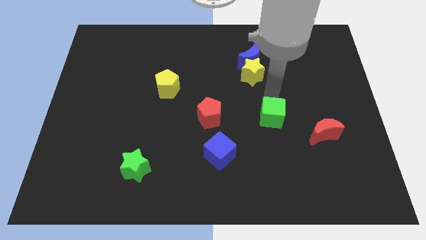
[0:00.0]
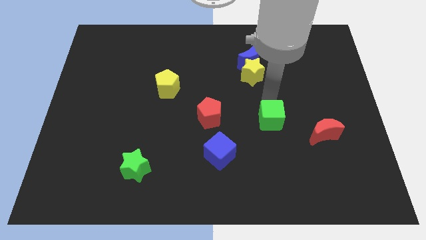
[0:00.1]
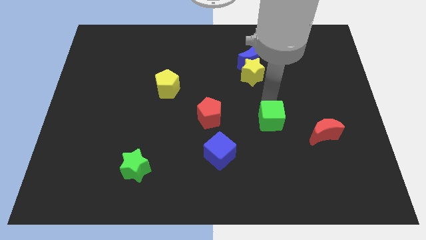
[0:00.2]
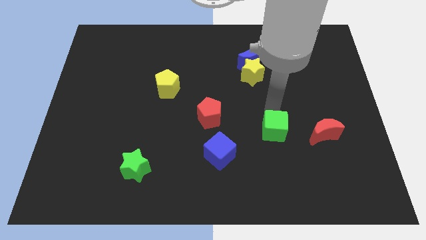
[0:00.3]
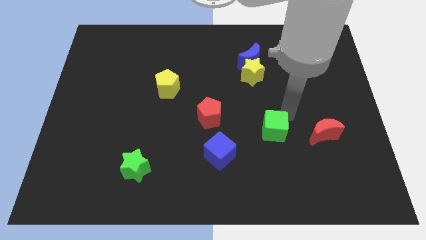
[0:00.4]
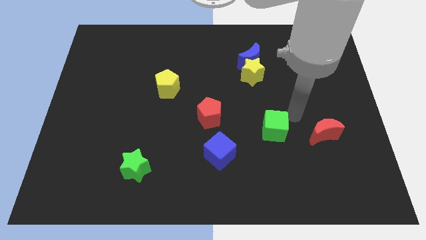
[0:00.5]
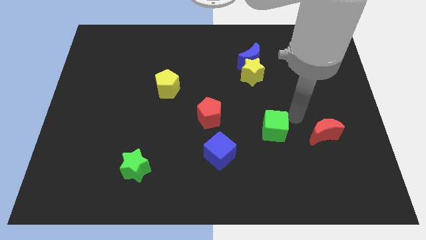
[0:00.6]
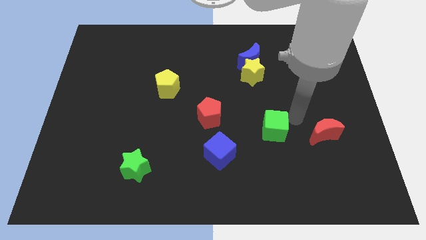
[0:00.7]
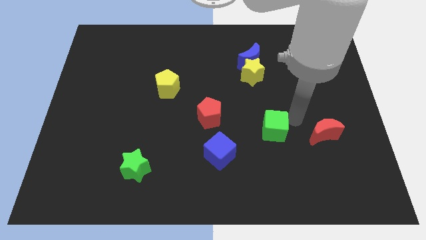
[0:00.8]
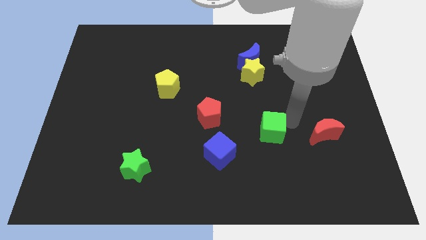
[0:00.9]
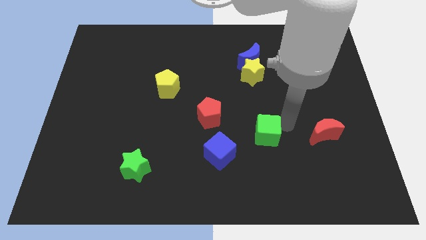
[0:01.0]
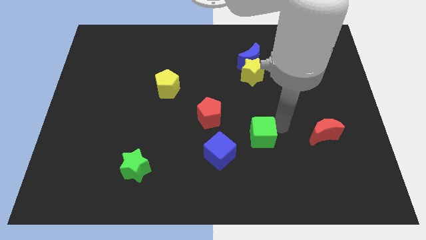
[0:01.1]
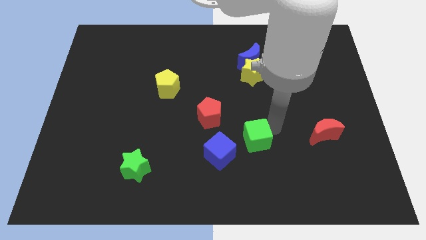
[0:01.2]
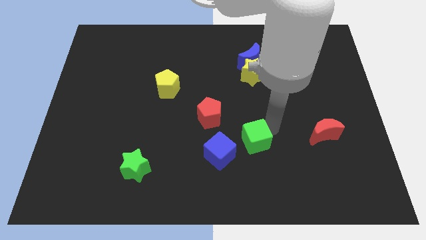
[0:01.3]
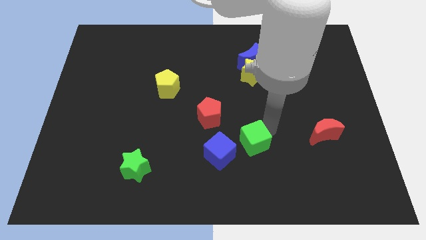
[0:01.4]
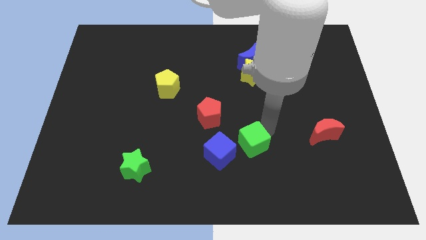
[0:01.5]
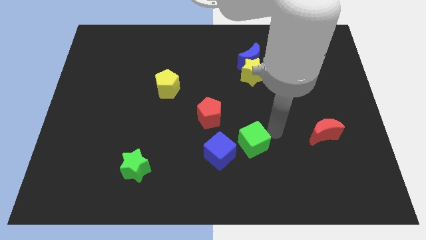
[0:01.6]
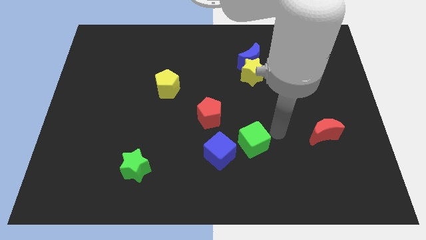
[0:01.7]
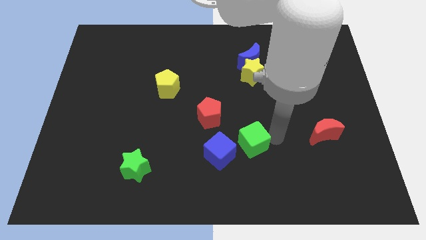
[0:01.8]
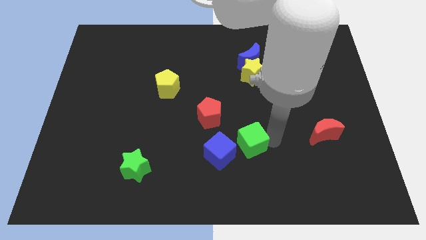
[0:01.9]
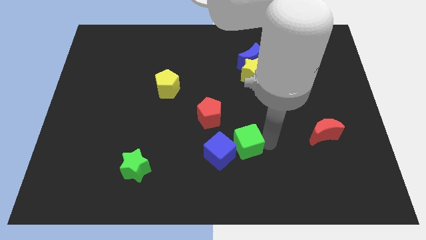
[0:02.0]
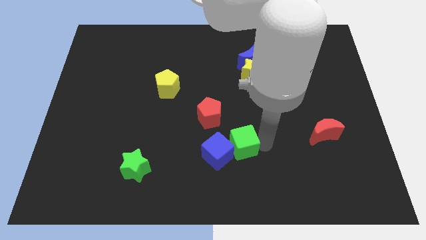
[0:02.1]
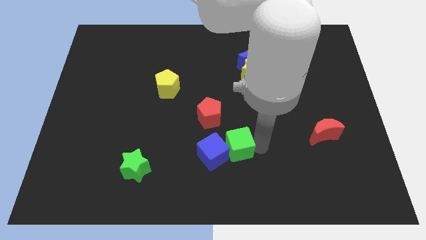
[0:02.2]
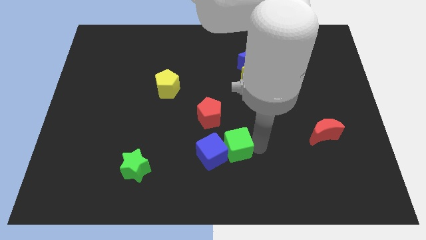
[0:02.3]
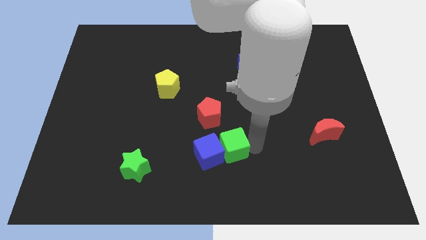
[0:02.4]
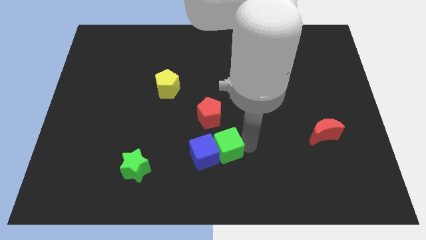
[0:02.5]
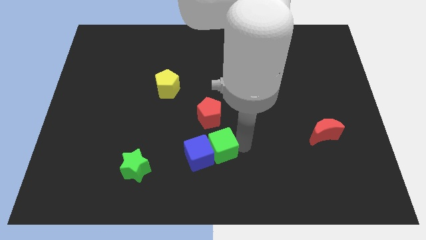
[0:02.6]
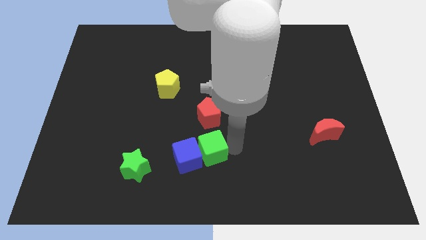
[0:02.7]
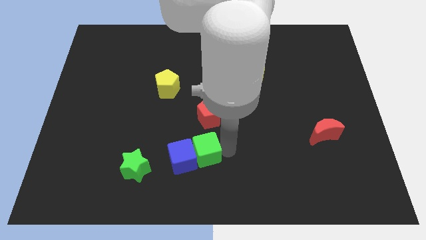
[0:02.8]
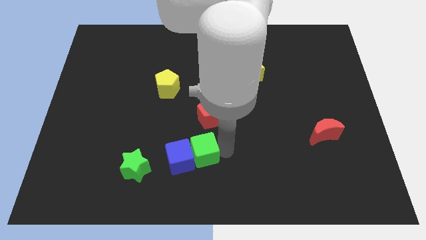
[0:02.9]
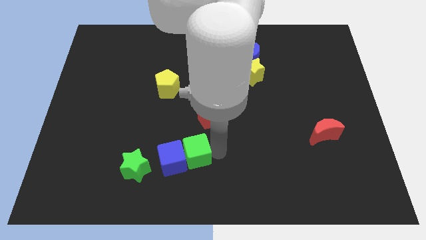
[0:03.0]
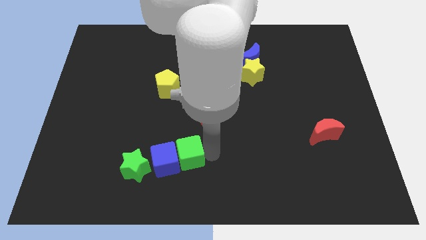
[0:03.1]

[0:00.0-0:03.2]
push the green cube and blue cube towards the green star

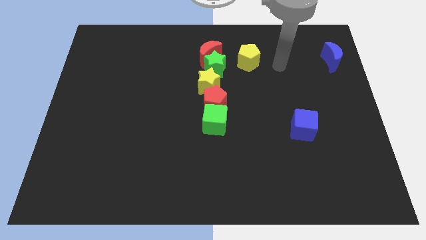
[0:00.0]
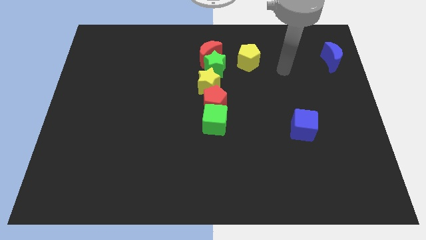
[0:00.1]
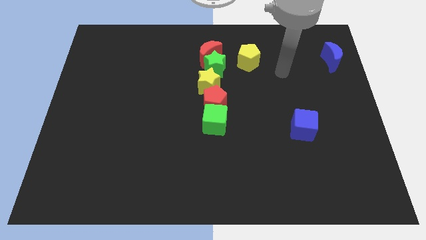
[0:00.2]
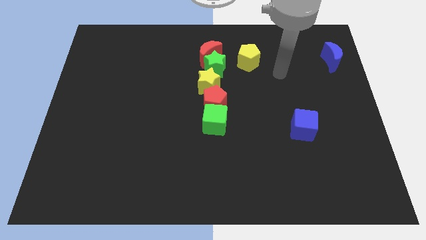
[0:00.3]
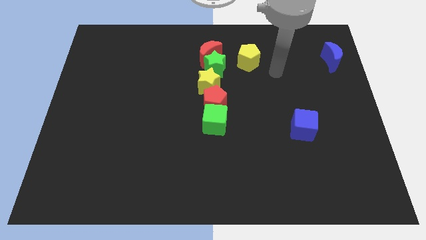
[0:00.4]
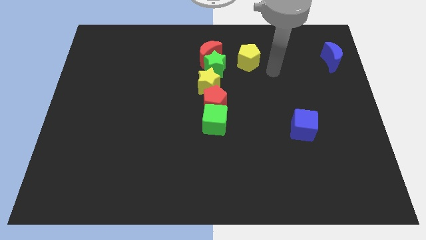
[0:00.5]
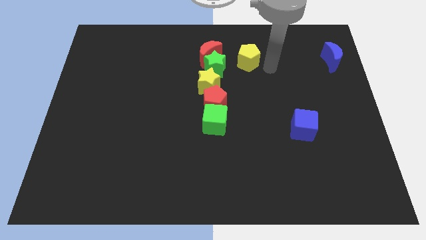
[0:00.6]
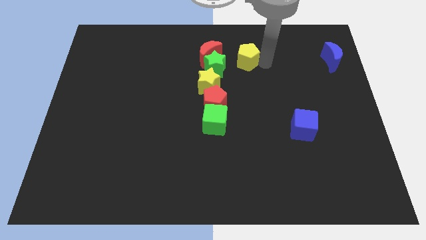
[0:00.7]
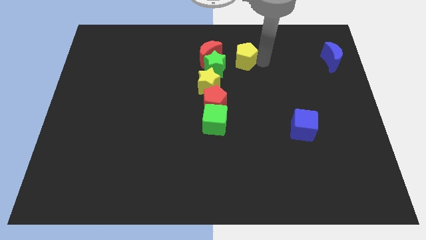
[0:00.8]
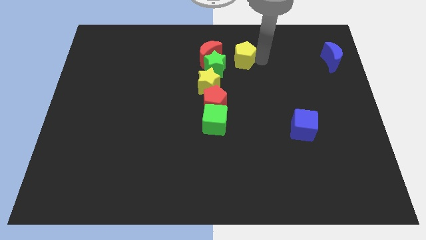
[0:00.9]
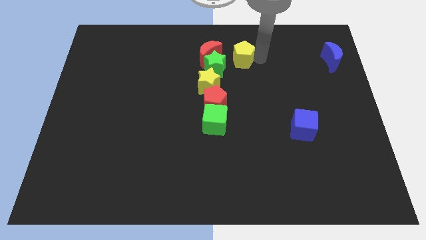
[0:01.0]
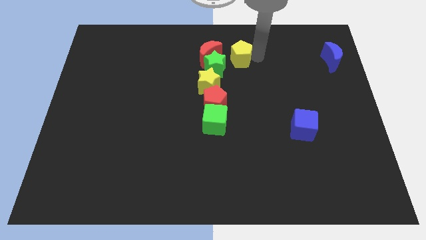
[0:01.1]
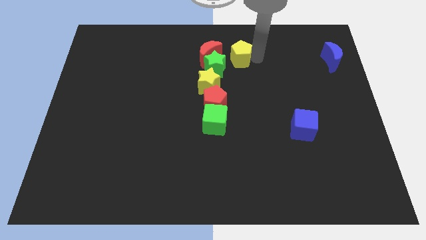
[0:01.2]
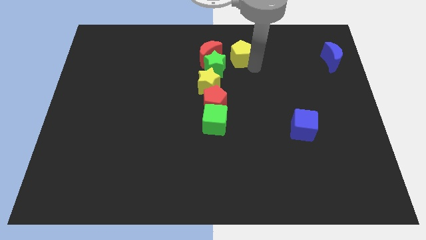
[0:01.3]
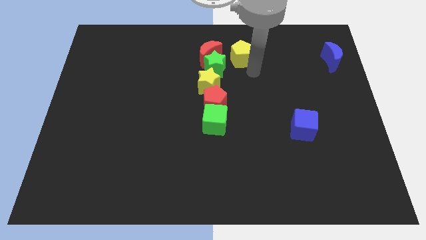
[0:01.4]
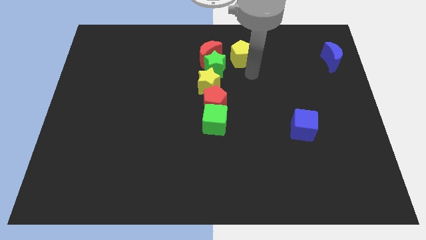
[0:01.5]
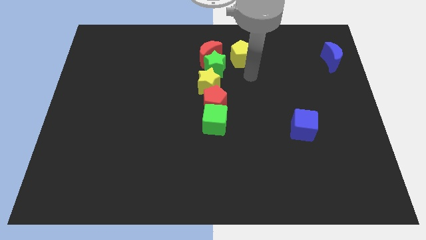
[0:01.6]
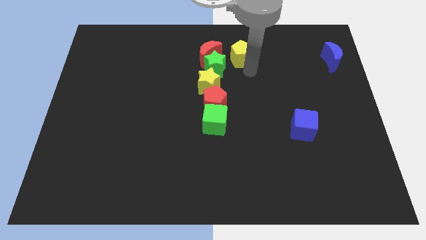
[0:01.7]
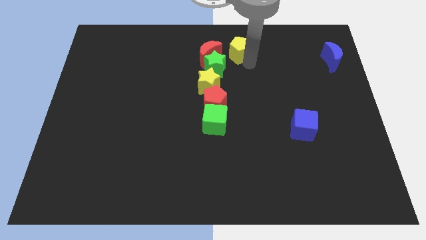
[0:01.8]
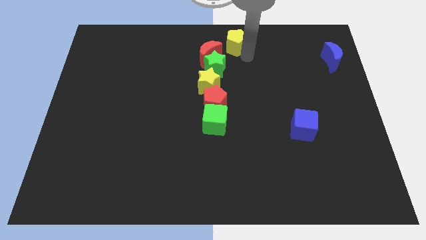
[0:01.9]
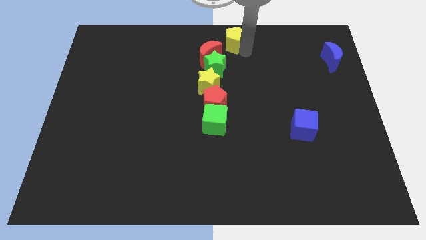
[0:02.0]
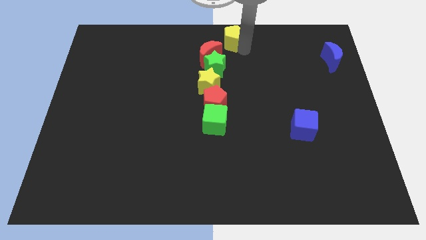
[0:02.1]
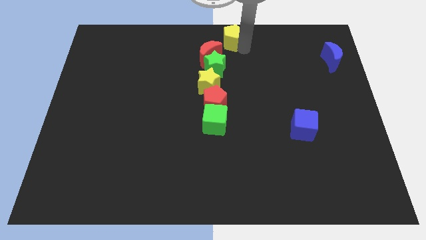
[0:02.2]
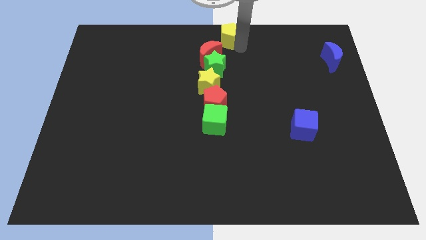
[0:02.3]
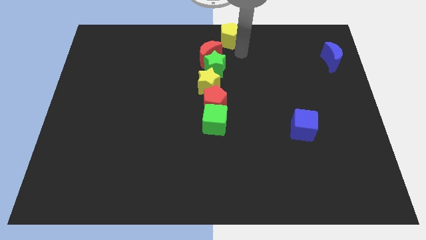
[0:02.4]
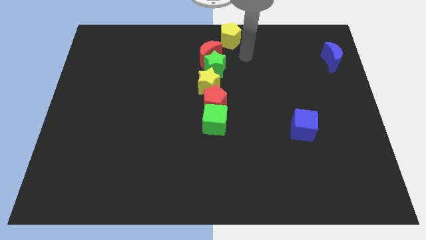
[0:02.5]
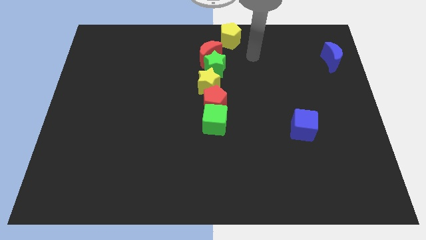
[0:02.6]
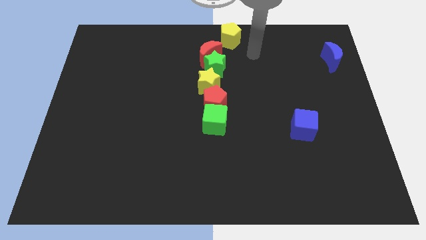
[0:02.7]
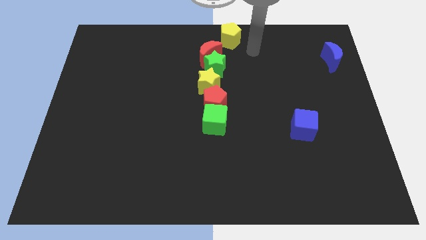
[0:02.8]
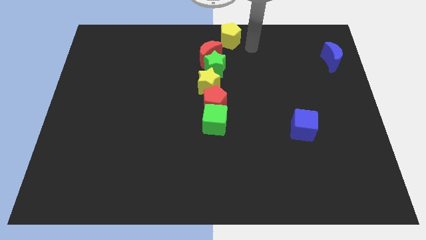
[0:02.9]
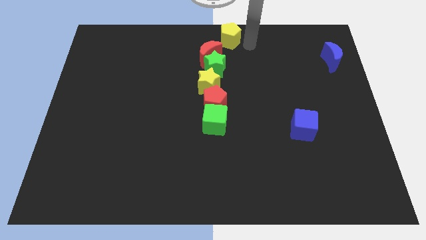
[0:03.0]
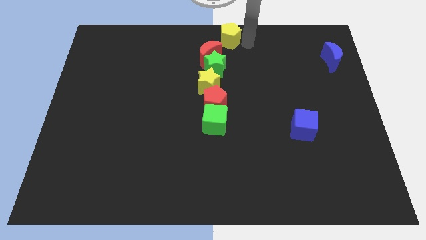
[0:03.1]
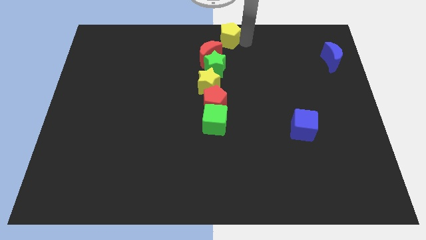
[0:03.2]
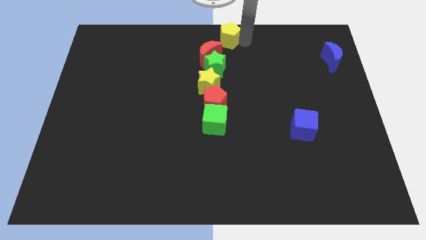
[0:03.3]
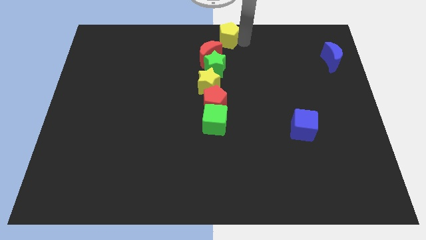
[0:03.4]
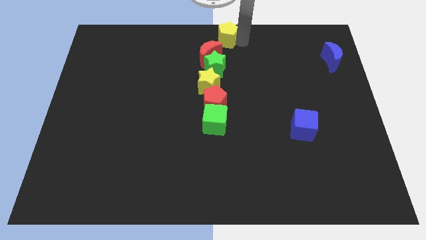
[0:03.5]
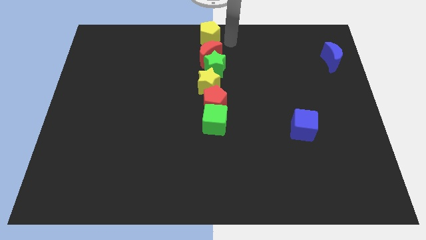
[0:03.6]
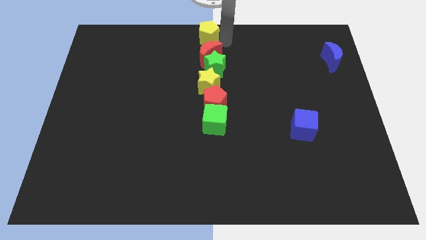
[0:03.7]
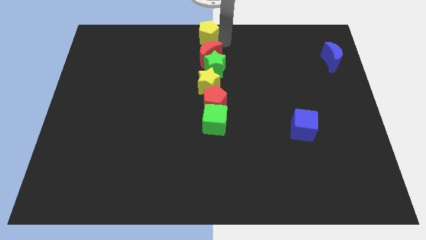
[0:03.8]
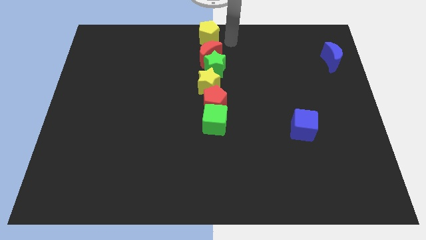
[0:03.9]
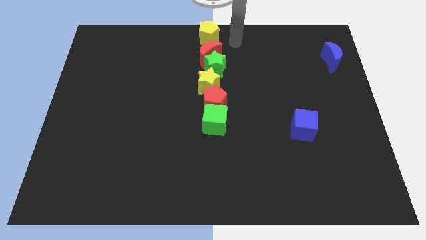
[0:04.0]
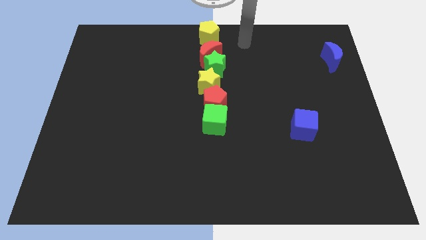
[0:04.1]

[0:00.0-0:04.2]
place the yellow pentagon at the top center of the board

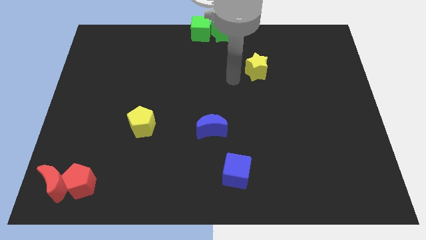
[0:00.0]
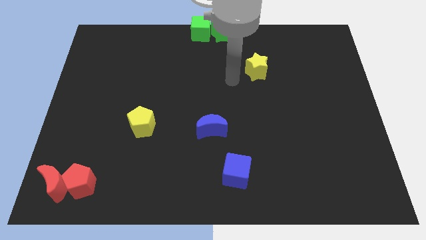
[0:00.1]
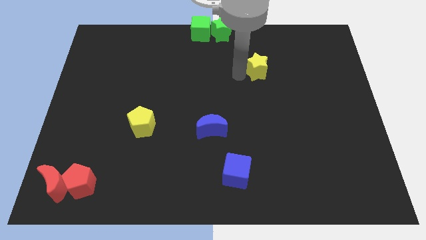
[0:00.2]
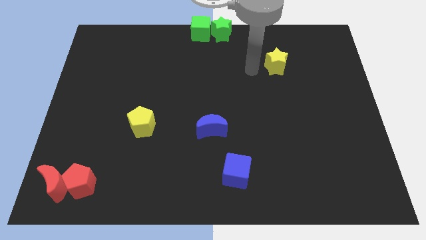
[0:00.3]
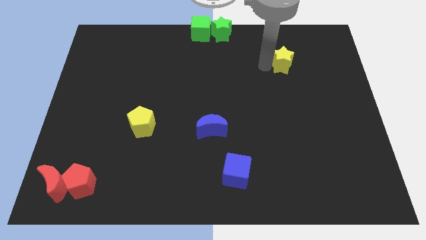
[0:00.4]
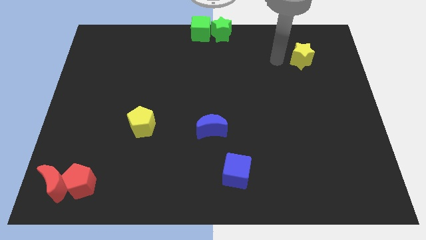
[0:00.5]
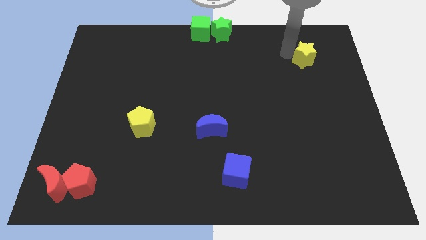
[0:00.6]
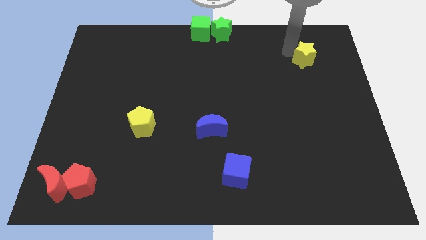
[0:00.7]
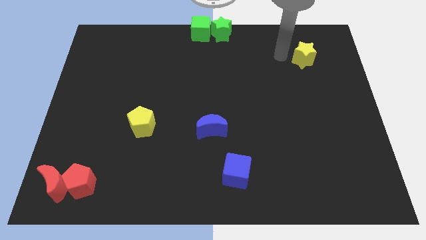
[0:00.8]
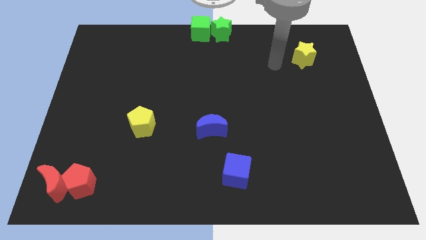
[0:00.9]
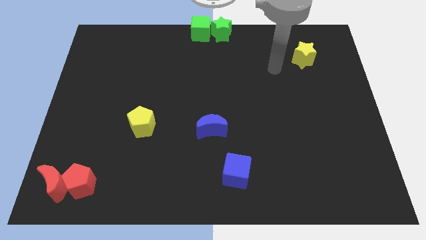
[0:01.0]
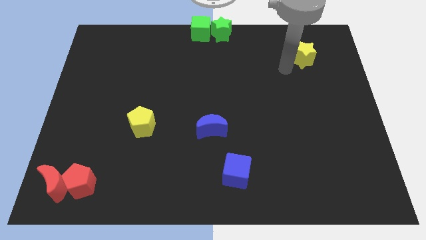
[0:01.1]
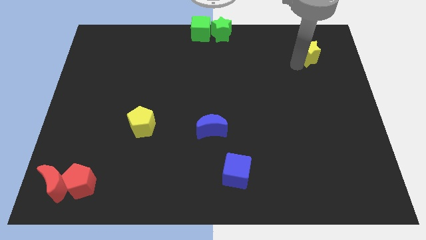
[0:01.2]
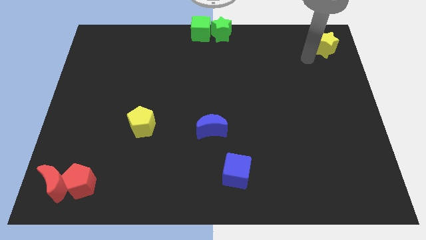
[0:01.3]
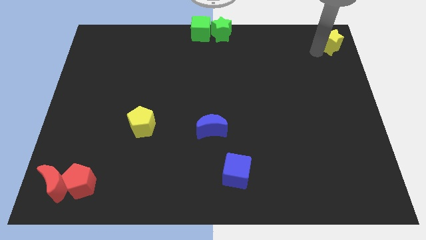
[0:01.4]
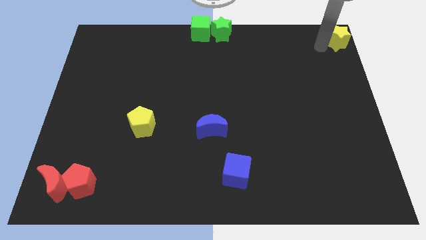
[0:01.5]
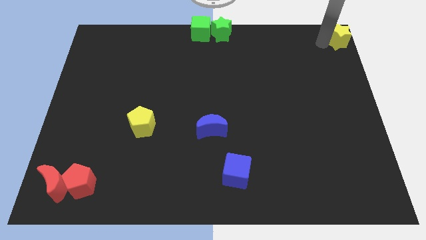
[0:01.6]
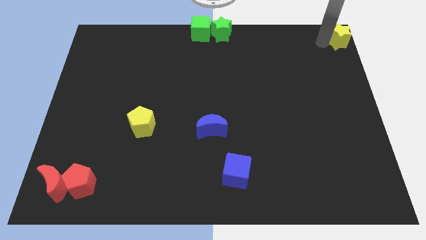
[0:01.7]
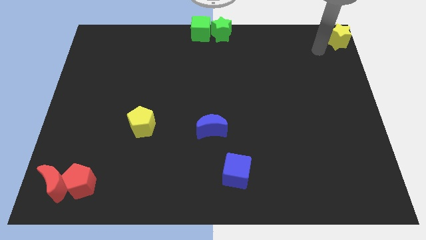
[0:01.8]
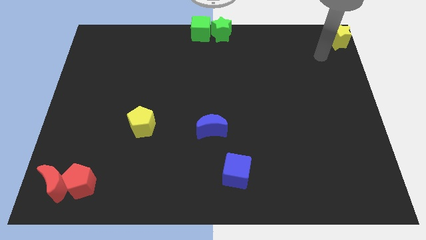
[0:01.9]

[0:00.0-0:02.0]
place the yellow star at top right corner of the board
